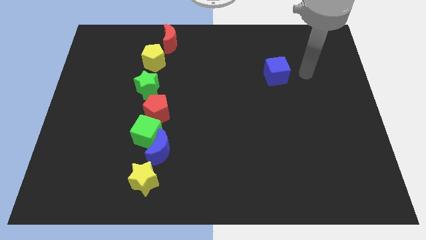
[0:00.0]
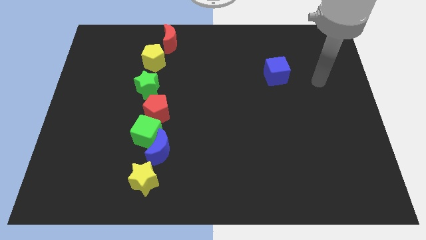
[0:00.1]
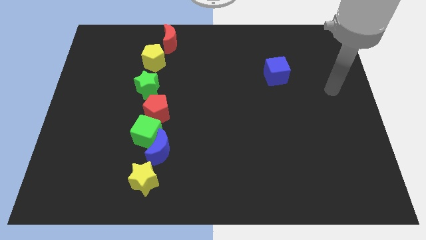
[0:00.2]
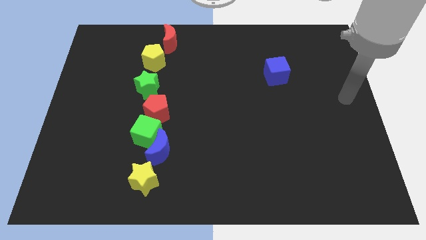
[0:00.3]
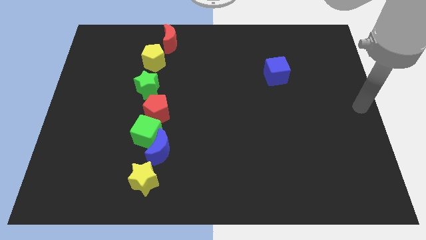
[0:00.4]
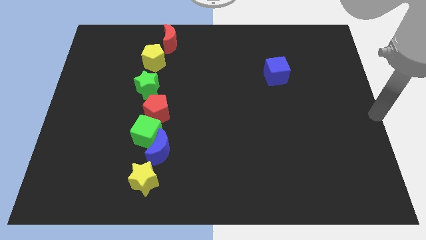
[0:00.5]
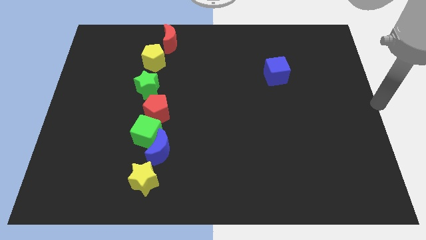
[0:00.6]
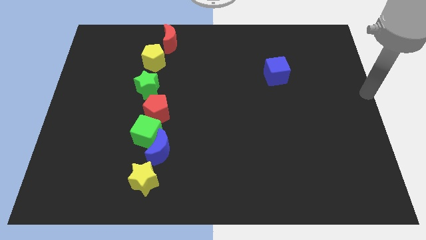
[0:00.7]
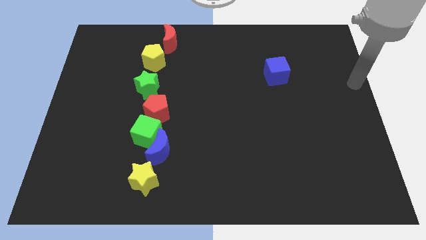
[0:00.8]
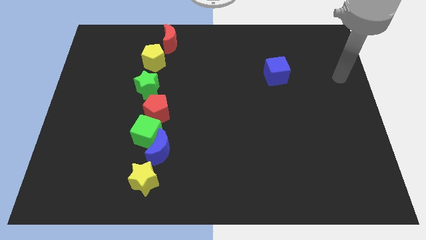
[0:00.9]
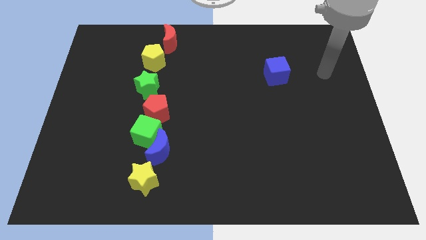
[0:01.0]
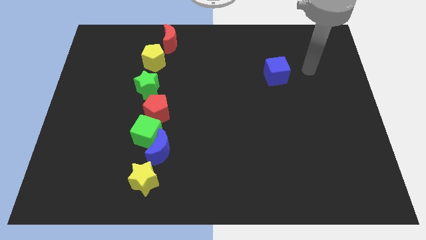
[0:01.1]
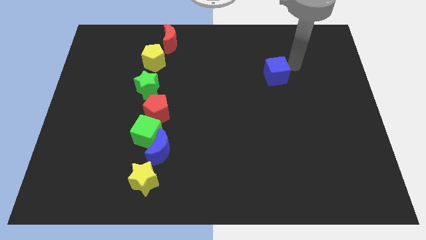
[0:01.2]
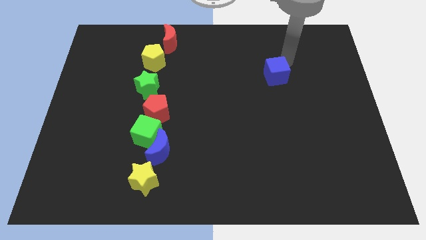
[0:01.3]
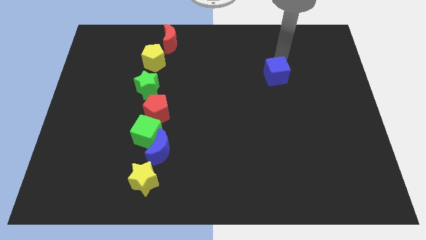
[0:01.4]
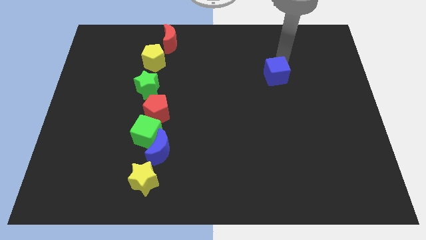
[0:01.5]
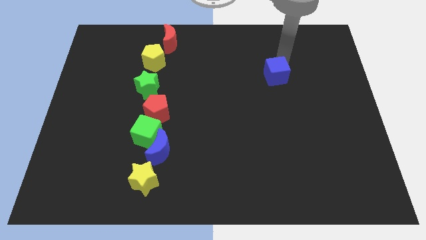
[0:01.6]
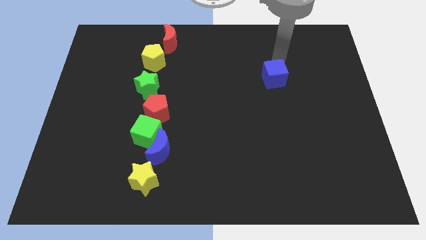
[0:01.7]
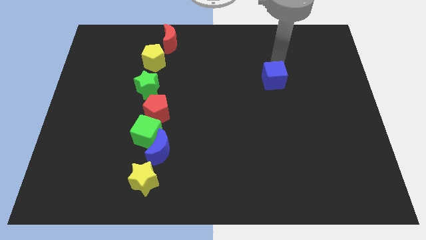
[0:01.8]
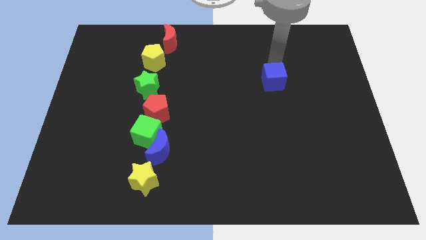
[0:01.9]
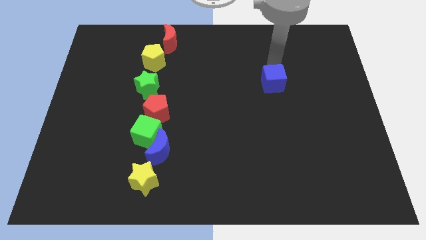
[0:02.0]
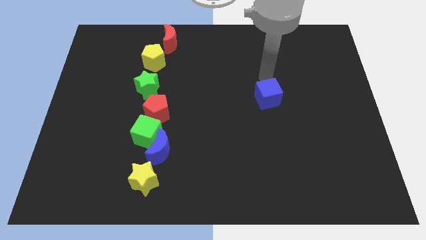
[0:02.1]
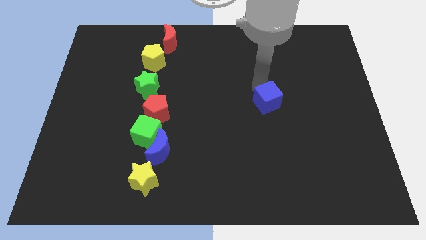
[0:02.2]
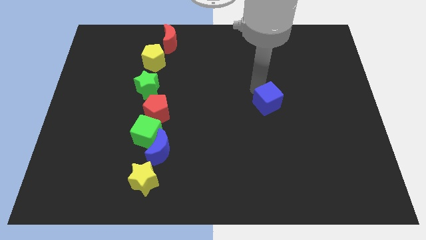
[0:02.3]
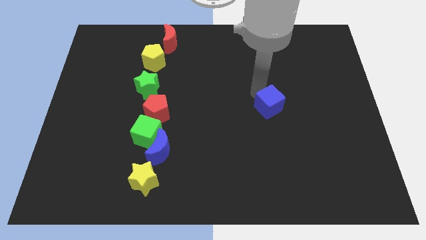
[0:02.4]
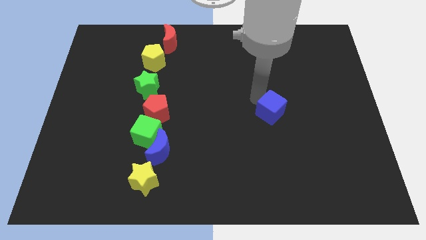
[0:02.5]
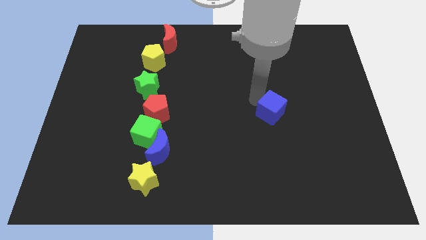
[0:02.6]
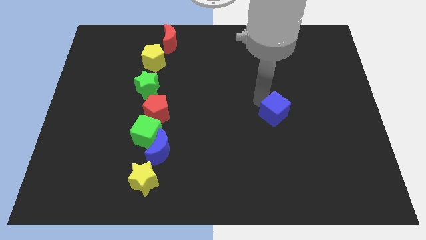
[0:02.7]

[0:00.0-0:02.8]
move the blue cube to the right of the red pentagon

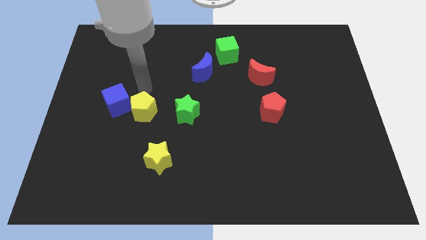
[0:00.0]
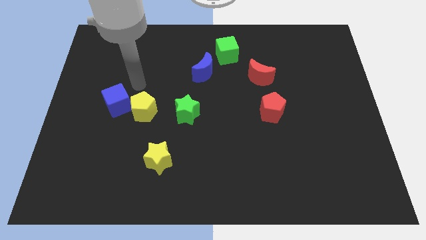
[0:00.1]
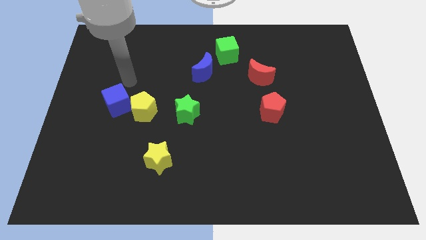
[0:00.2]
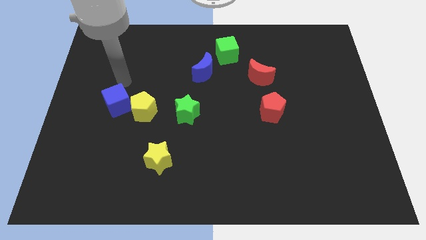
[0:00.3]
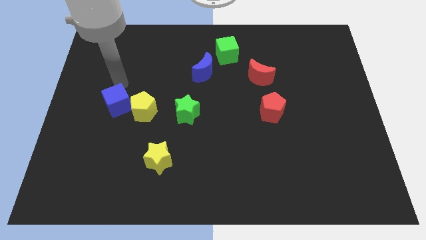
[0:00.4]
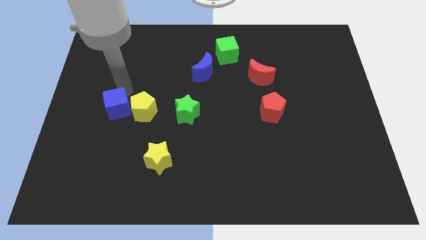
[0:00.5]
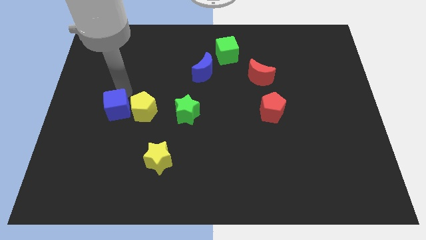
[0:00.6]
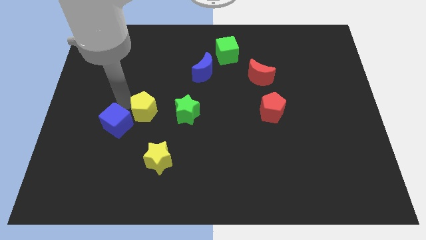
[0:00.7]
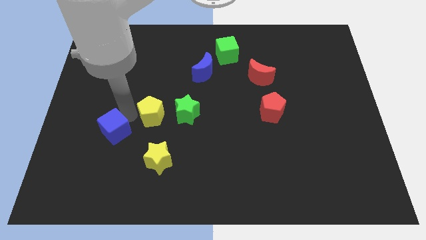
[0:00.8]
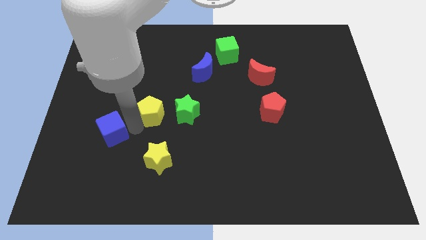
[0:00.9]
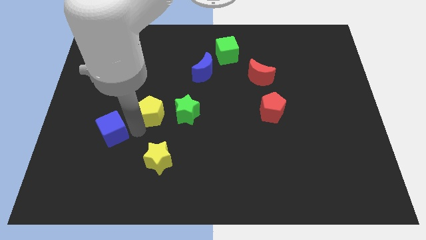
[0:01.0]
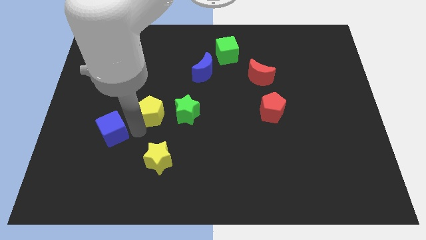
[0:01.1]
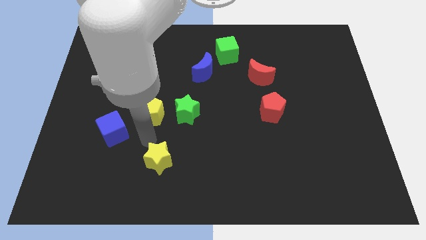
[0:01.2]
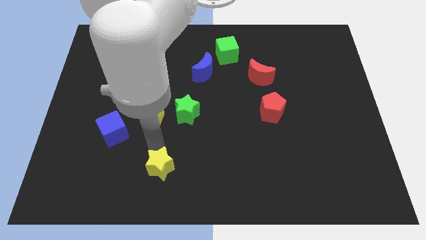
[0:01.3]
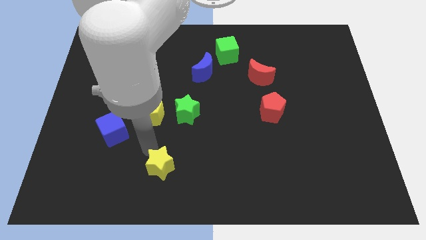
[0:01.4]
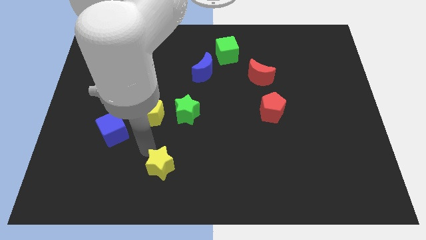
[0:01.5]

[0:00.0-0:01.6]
make a triangle out of yellow blocks and the blue cube

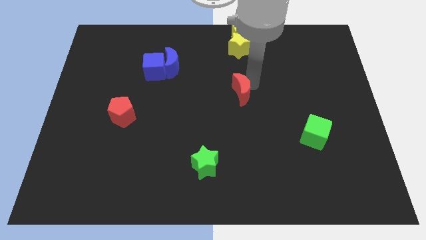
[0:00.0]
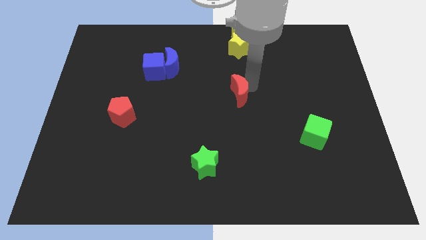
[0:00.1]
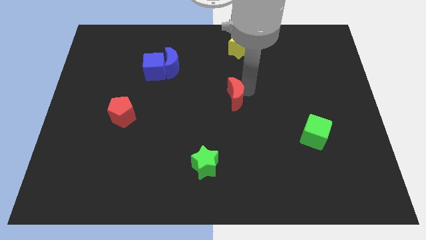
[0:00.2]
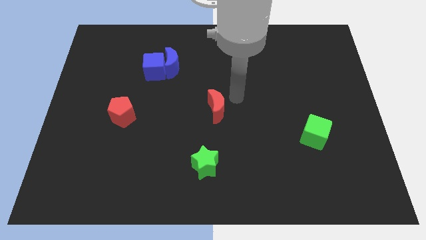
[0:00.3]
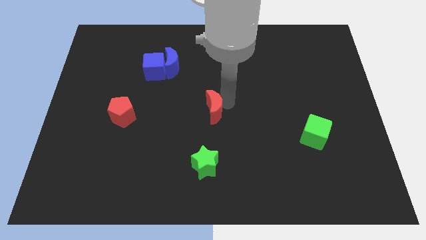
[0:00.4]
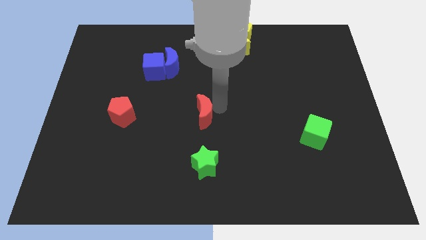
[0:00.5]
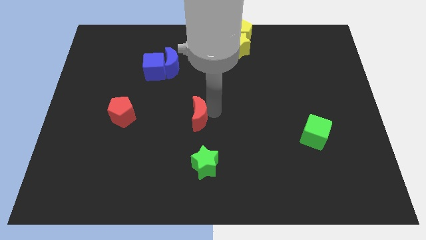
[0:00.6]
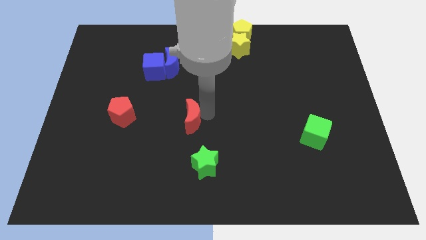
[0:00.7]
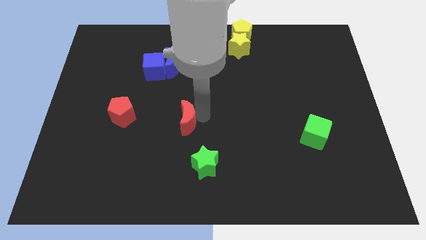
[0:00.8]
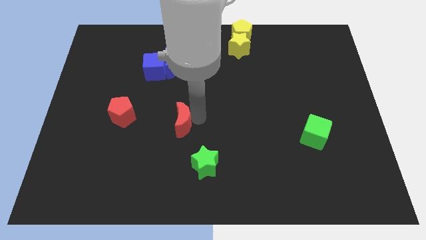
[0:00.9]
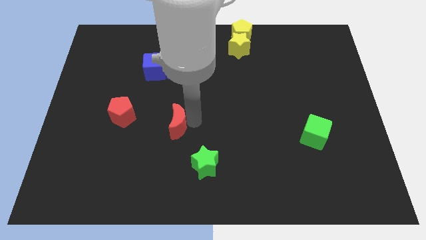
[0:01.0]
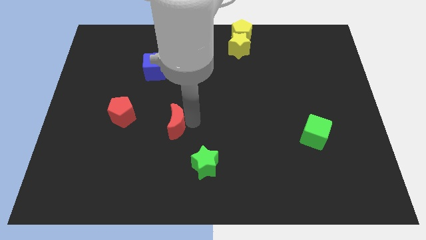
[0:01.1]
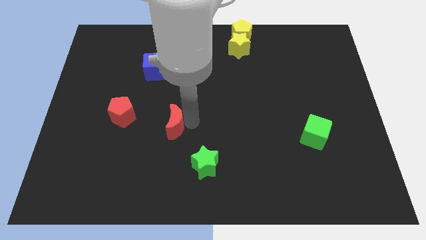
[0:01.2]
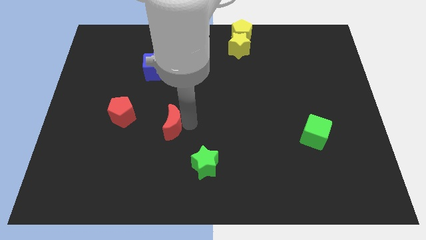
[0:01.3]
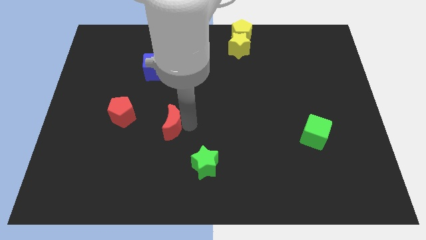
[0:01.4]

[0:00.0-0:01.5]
slide the red crescent towards the red pentagon

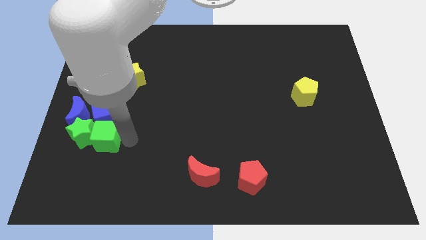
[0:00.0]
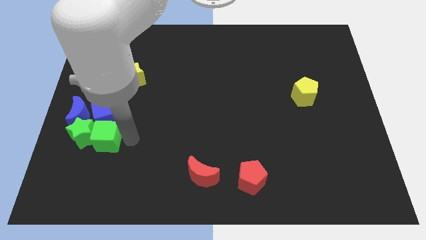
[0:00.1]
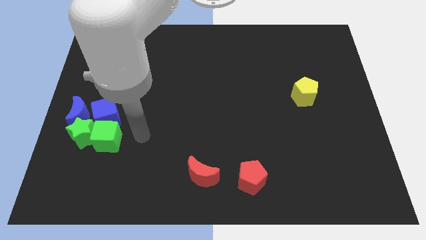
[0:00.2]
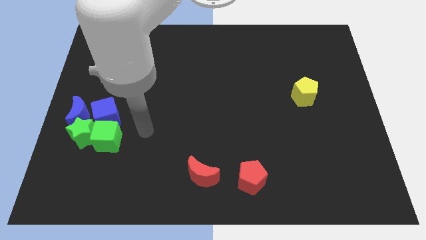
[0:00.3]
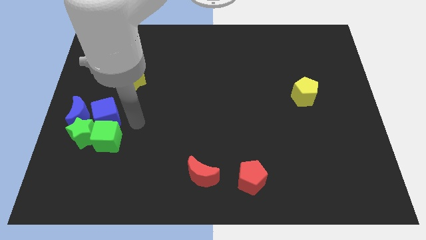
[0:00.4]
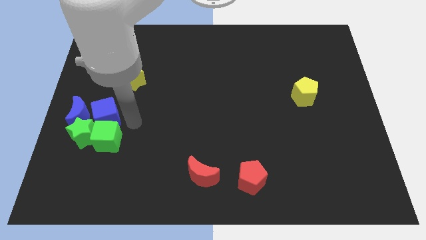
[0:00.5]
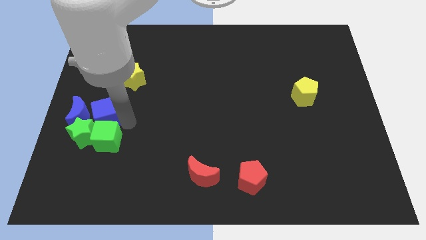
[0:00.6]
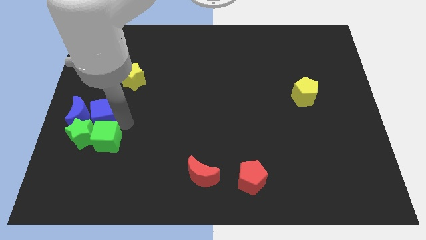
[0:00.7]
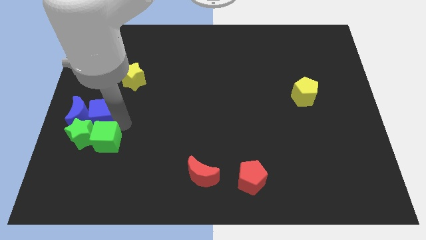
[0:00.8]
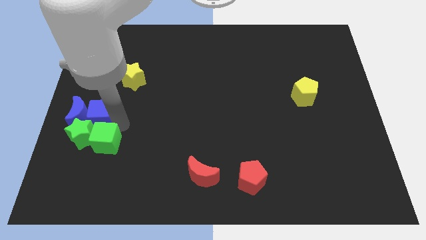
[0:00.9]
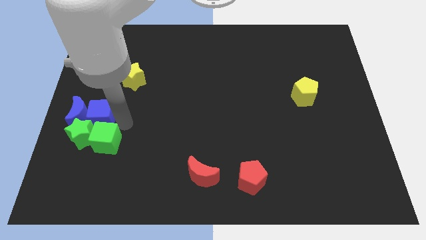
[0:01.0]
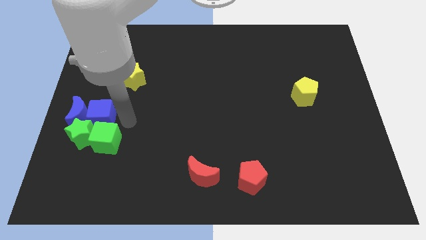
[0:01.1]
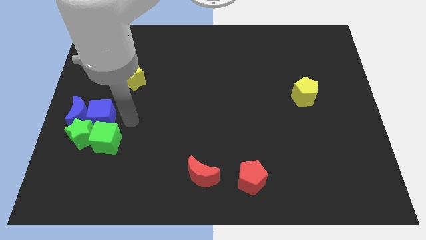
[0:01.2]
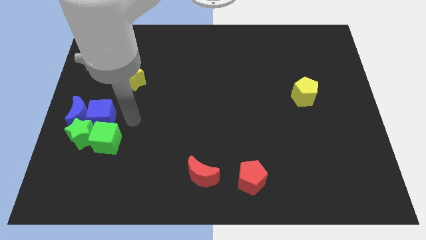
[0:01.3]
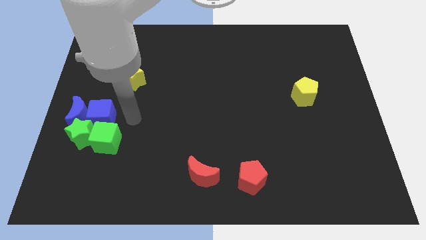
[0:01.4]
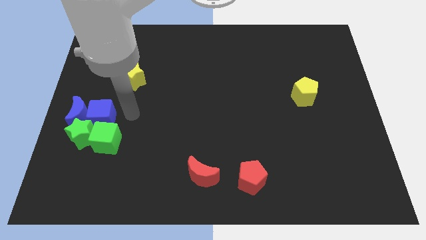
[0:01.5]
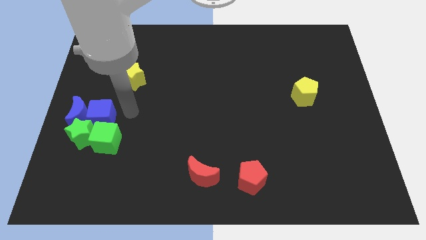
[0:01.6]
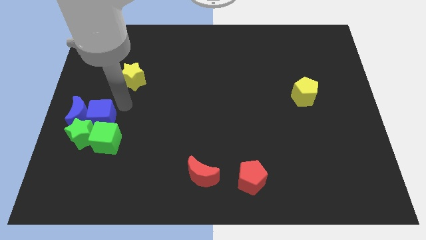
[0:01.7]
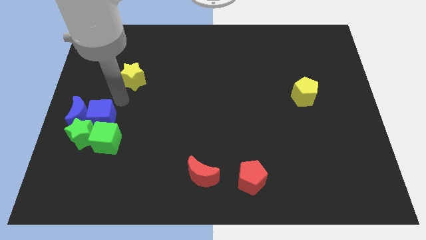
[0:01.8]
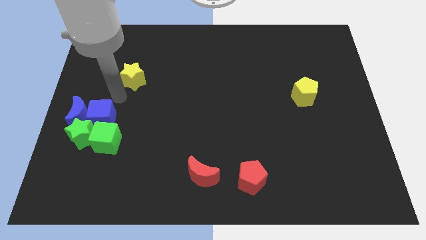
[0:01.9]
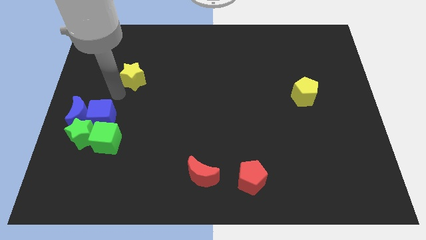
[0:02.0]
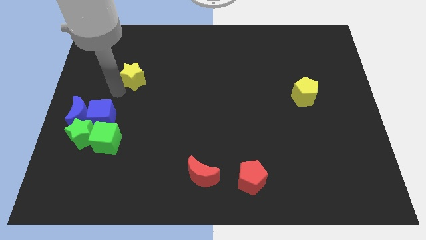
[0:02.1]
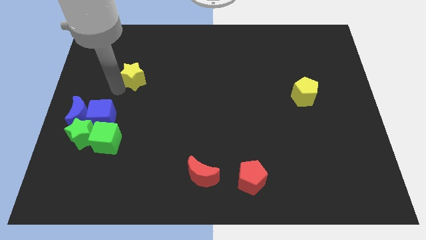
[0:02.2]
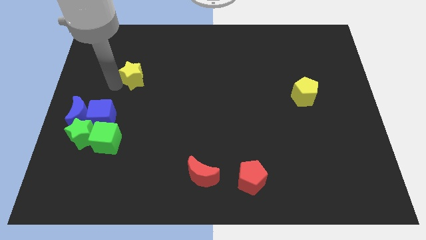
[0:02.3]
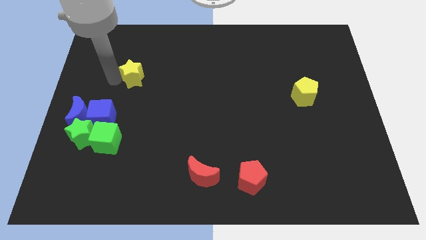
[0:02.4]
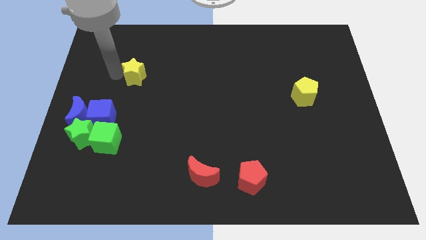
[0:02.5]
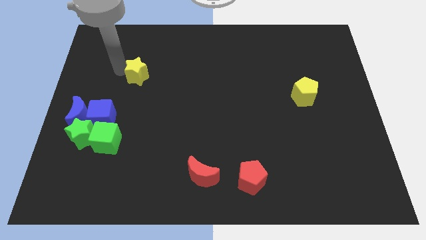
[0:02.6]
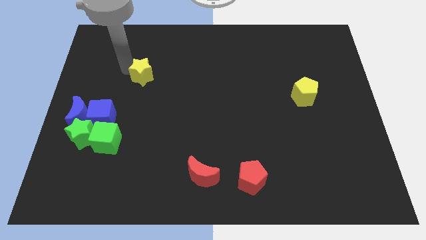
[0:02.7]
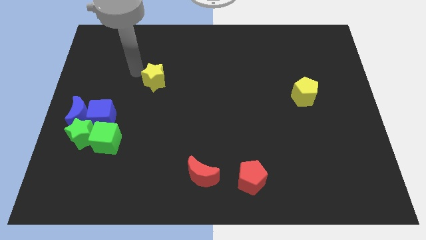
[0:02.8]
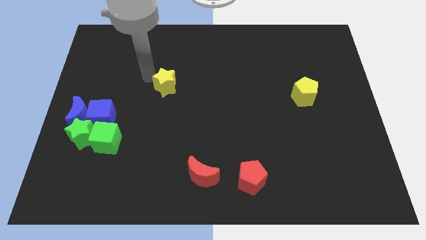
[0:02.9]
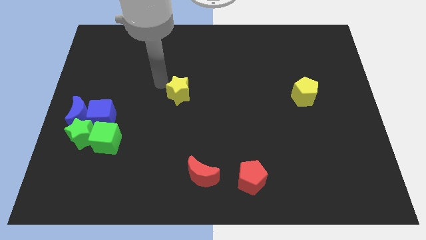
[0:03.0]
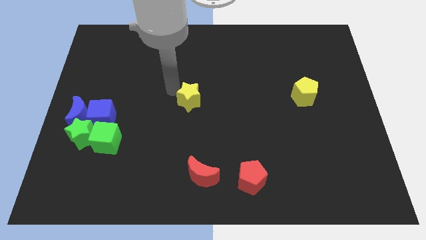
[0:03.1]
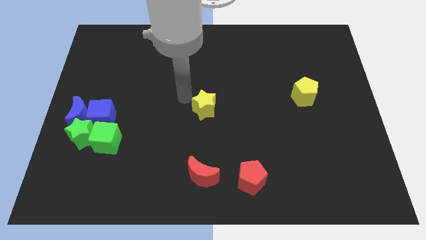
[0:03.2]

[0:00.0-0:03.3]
place the yellow star above the red moon
